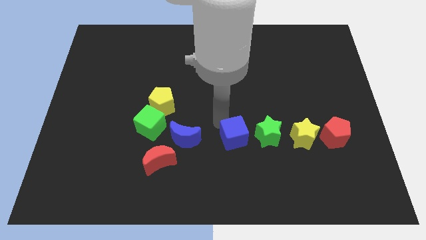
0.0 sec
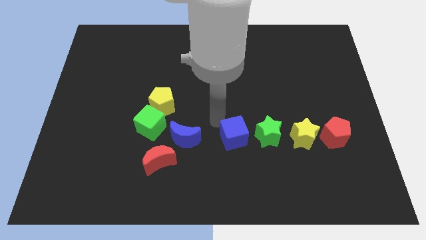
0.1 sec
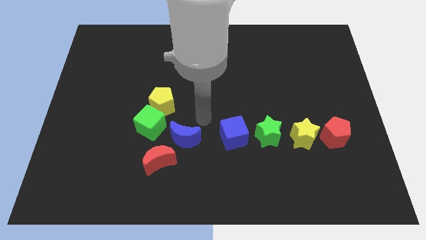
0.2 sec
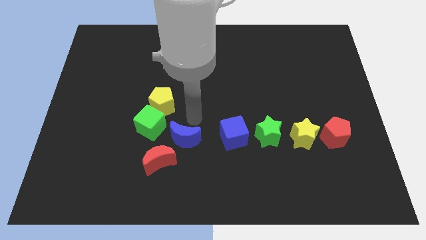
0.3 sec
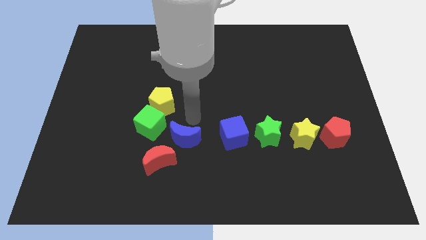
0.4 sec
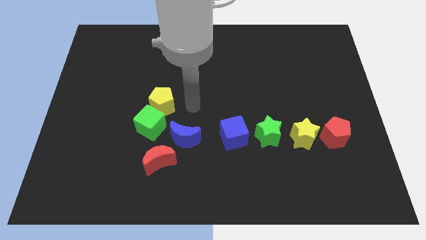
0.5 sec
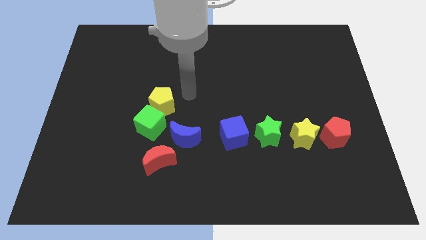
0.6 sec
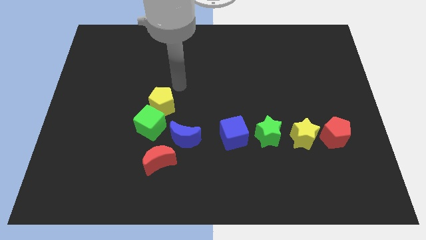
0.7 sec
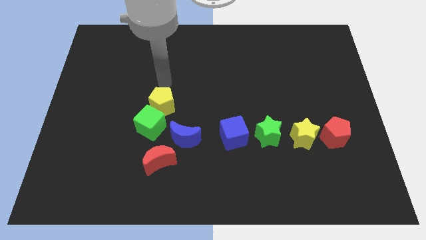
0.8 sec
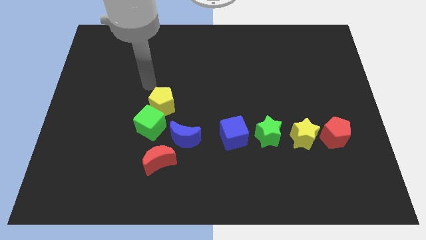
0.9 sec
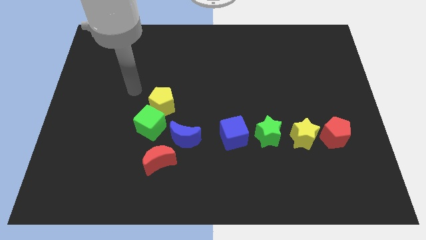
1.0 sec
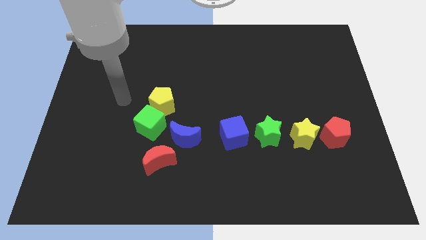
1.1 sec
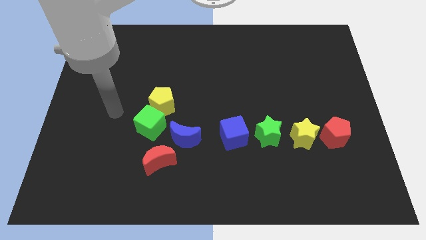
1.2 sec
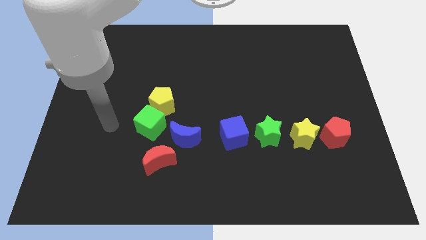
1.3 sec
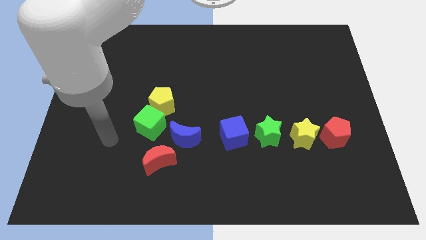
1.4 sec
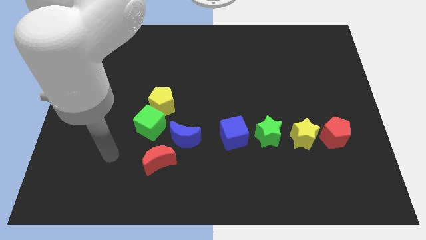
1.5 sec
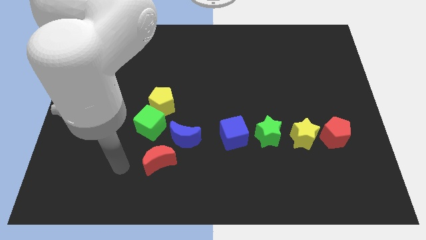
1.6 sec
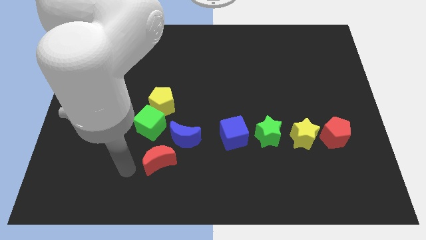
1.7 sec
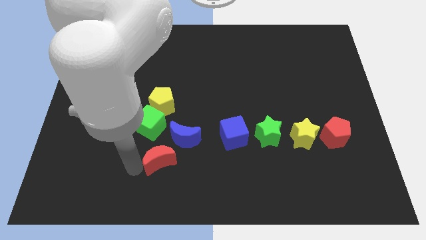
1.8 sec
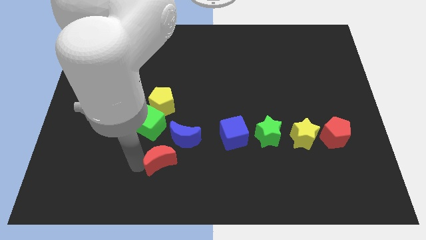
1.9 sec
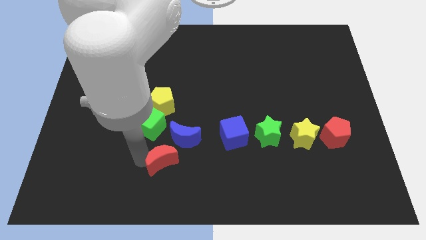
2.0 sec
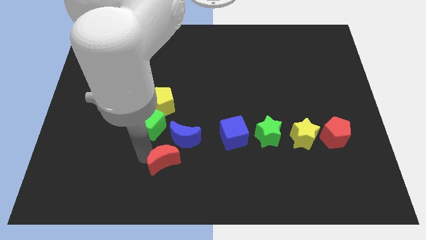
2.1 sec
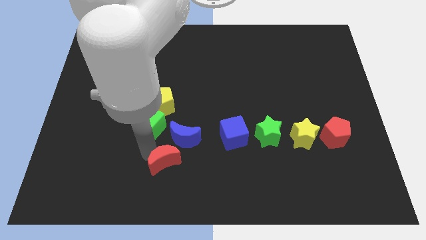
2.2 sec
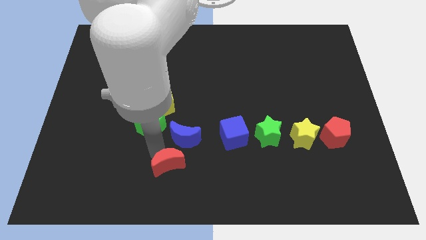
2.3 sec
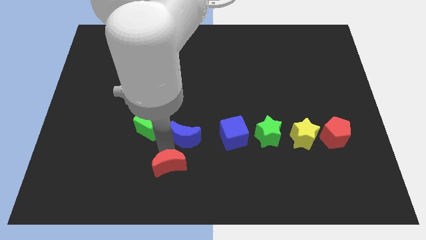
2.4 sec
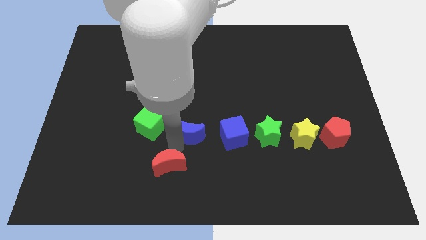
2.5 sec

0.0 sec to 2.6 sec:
move your arm from blue cube to the bottom of blue crescent

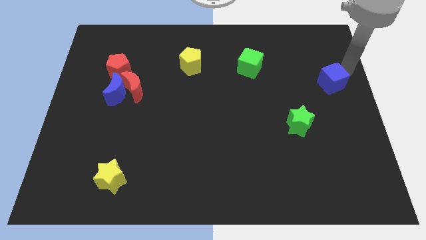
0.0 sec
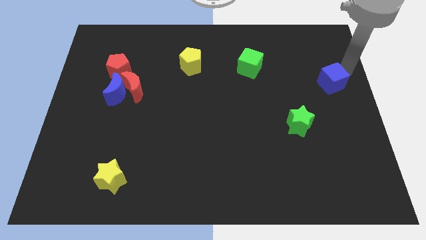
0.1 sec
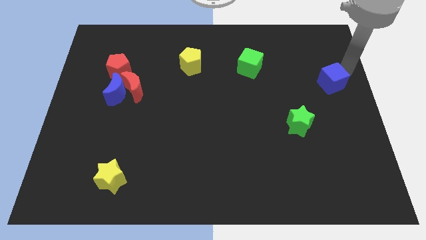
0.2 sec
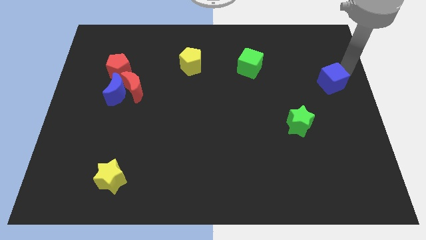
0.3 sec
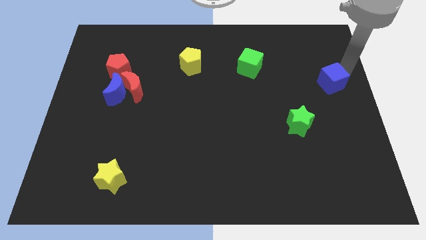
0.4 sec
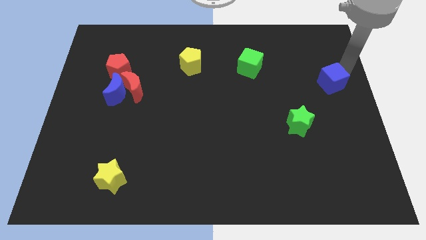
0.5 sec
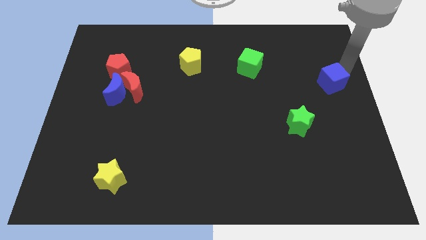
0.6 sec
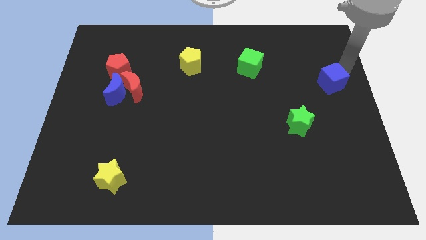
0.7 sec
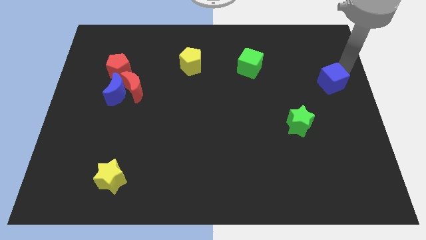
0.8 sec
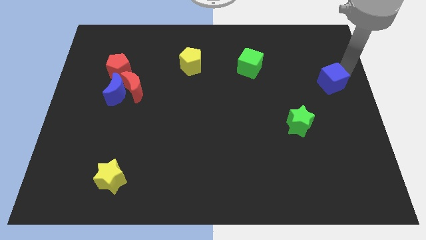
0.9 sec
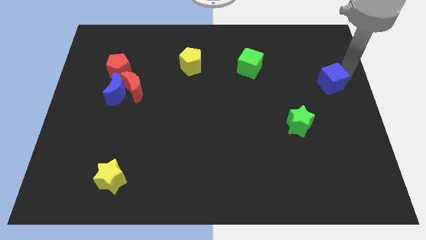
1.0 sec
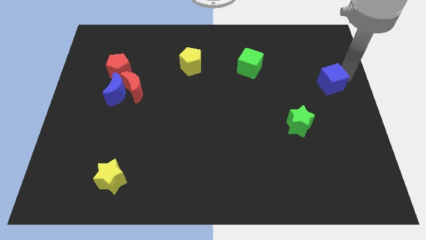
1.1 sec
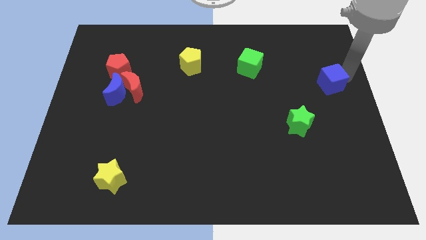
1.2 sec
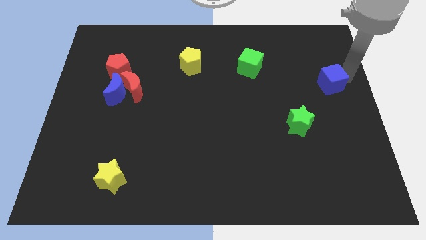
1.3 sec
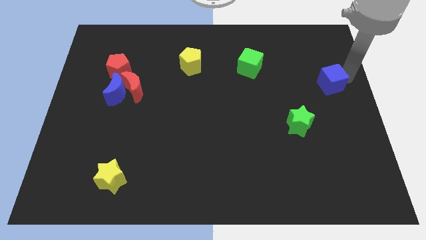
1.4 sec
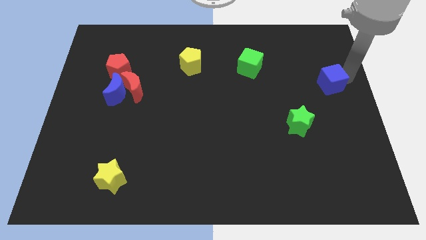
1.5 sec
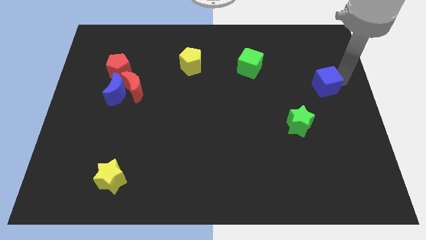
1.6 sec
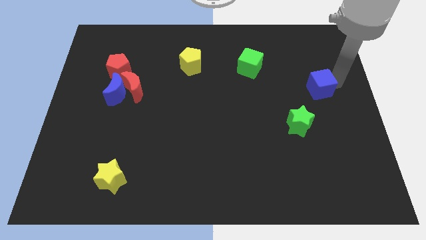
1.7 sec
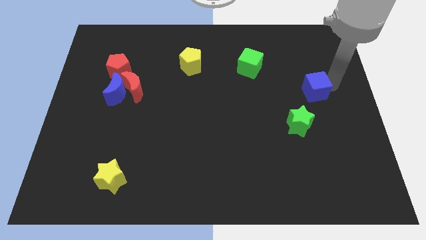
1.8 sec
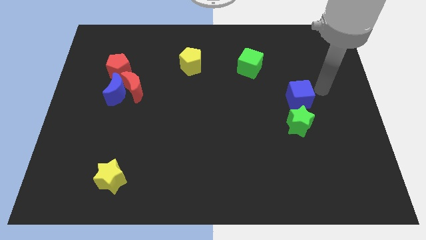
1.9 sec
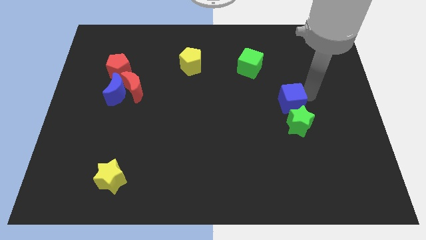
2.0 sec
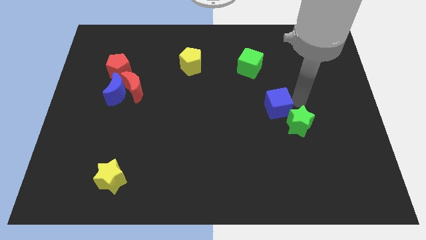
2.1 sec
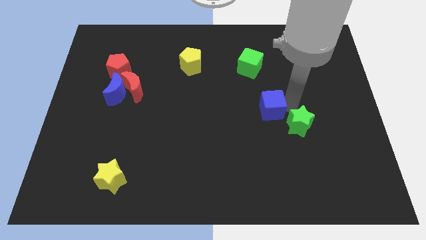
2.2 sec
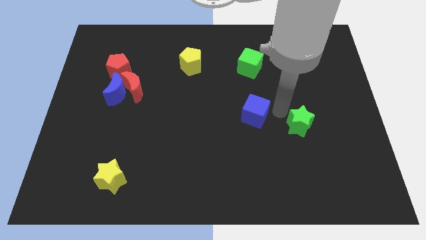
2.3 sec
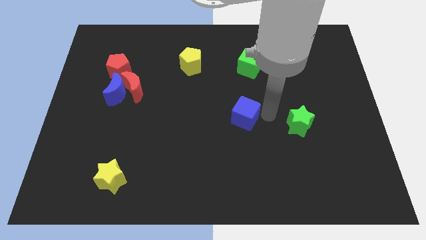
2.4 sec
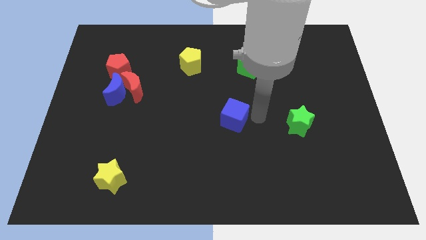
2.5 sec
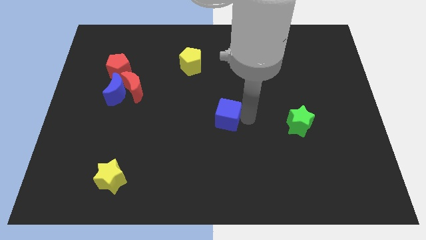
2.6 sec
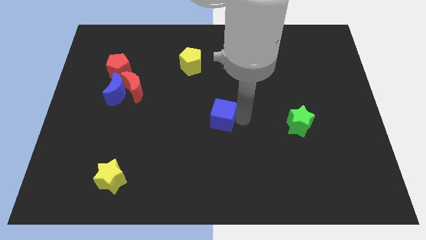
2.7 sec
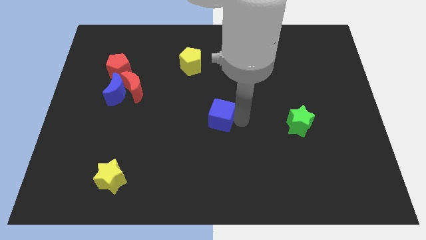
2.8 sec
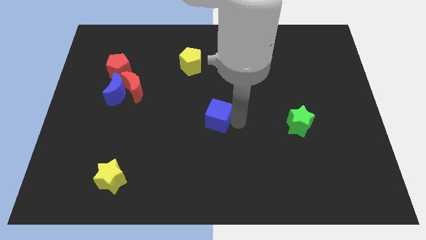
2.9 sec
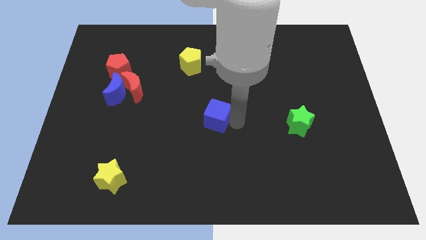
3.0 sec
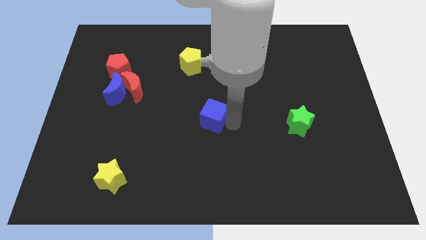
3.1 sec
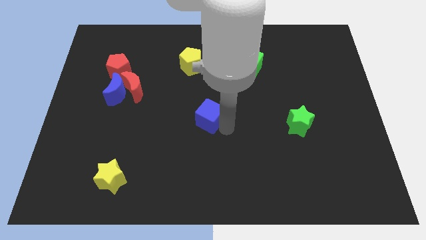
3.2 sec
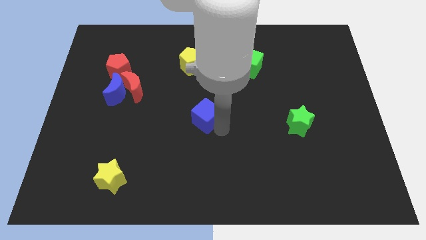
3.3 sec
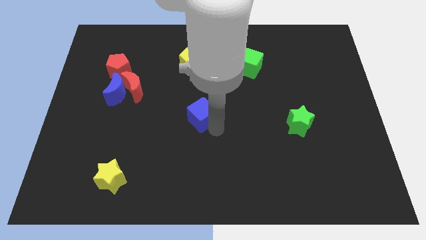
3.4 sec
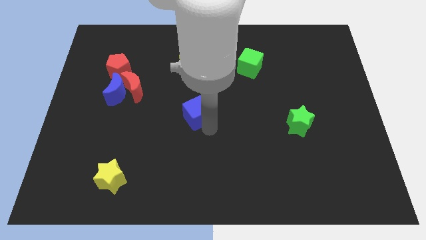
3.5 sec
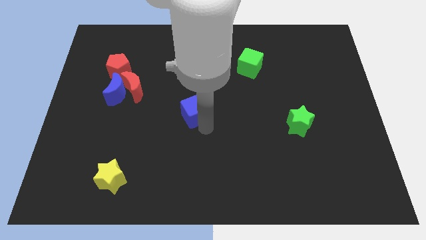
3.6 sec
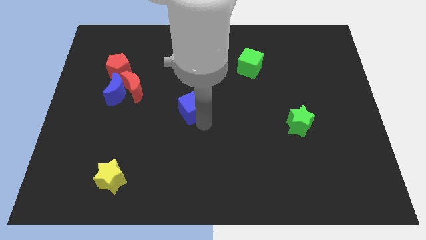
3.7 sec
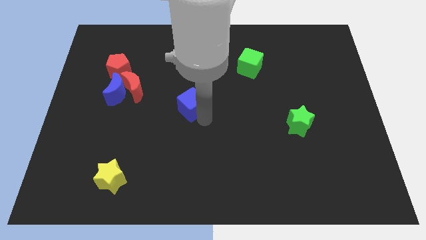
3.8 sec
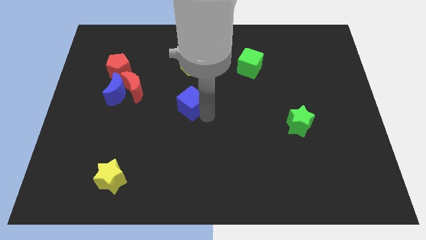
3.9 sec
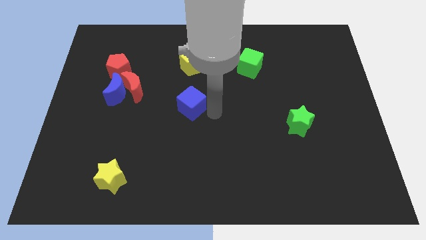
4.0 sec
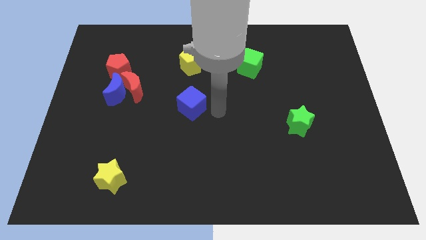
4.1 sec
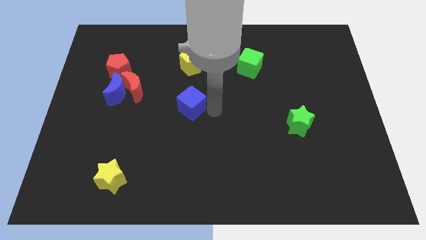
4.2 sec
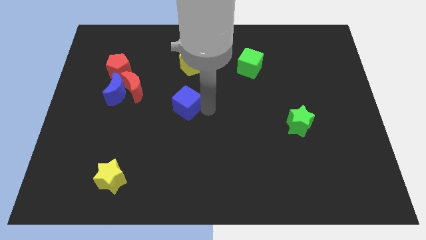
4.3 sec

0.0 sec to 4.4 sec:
place the blue cube in between the green cube and yellow star

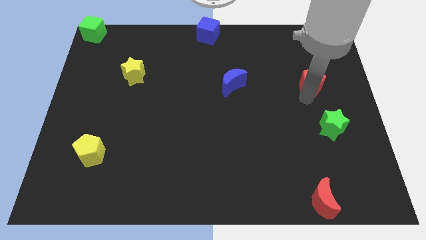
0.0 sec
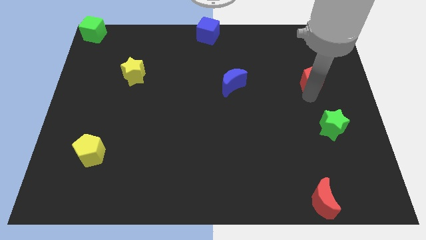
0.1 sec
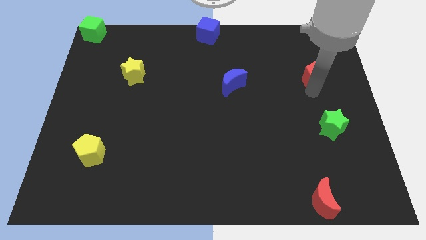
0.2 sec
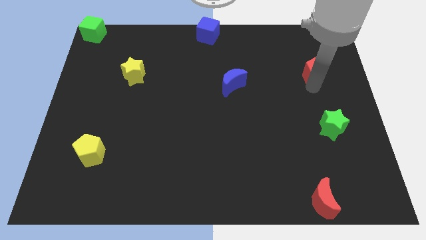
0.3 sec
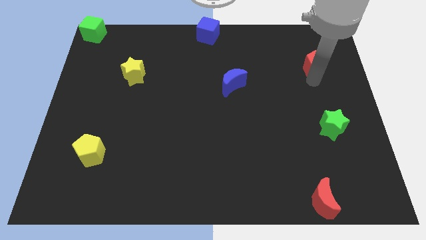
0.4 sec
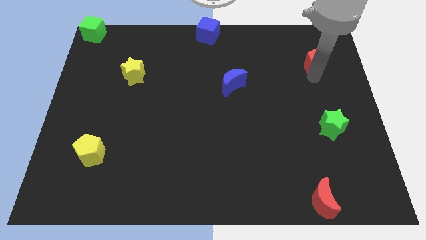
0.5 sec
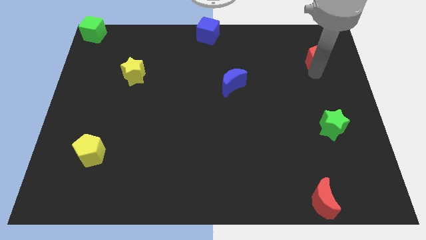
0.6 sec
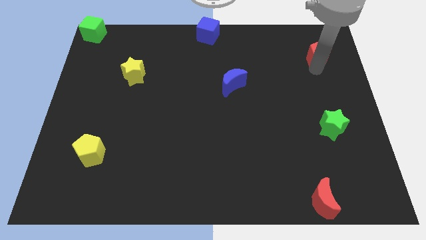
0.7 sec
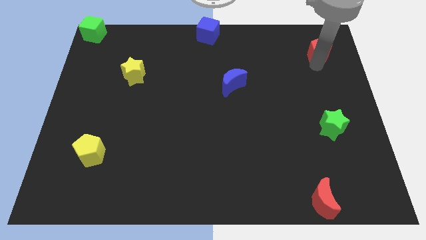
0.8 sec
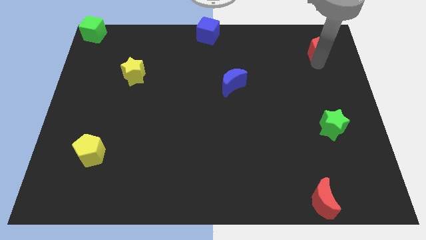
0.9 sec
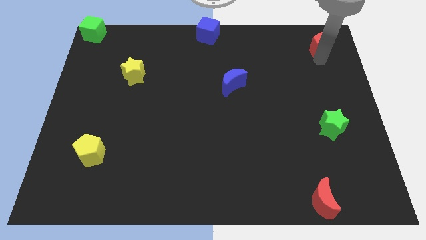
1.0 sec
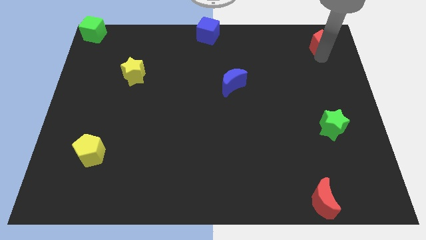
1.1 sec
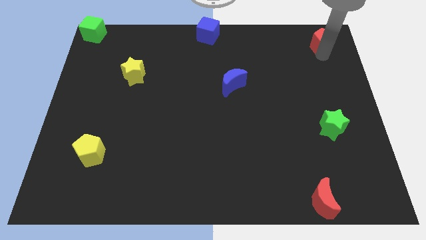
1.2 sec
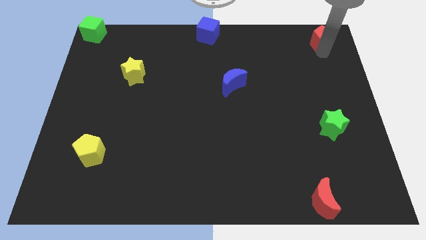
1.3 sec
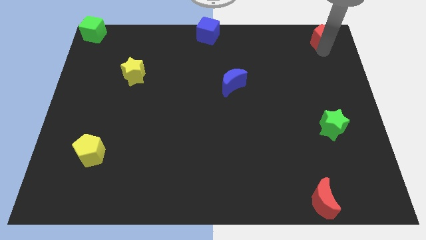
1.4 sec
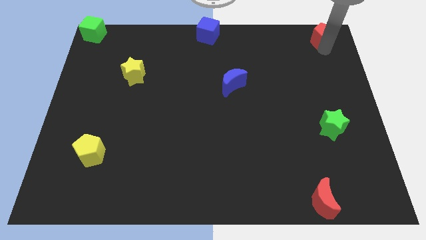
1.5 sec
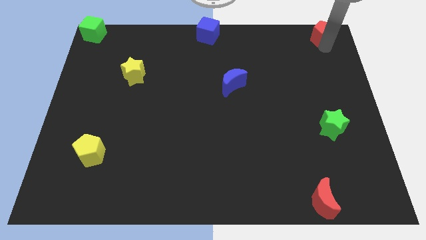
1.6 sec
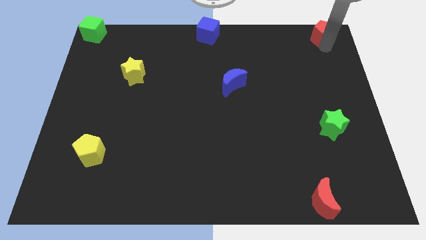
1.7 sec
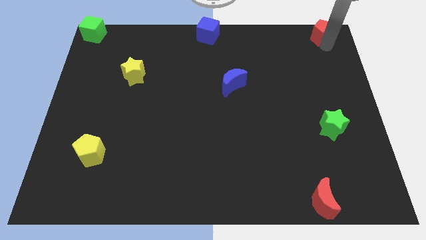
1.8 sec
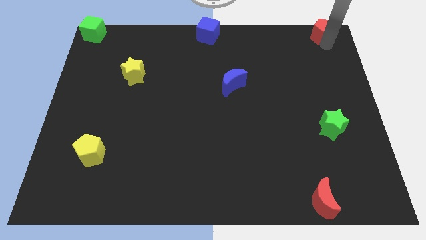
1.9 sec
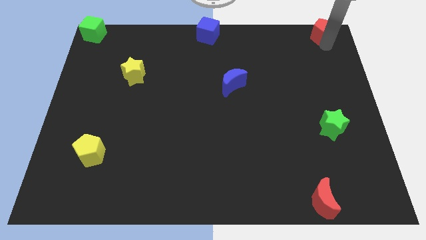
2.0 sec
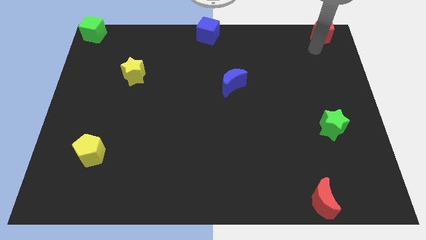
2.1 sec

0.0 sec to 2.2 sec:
move the red pentagon to the top right side of the table
